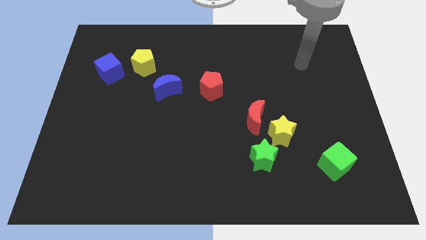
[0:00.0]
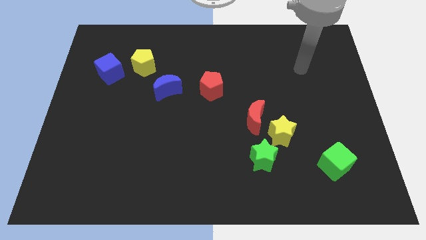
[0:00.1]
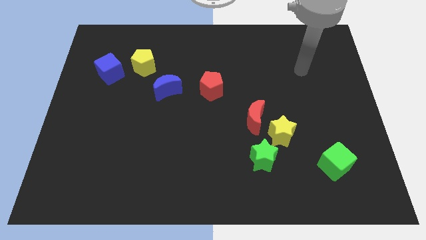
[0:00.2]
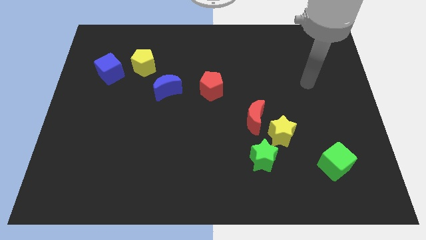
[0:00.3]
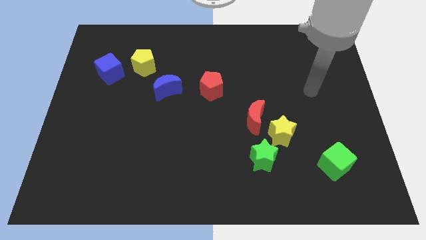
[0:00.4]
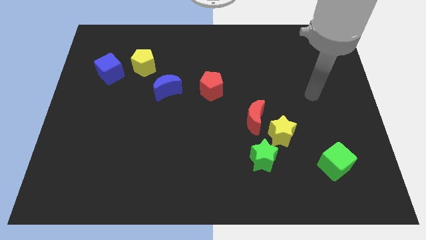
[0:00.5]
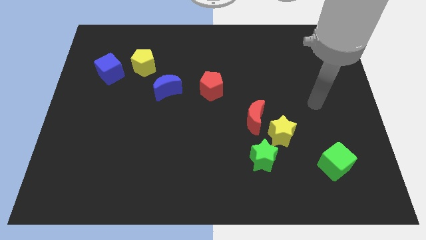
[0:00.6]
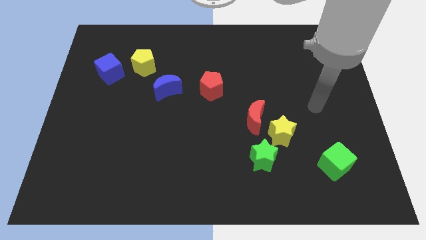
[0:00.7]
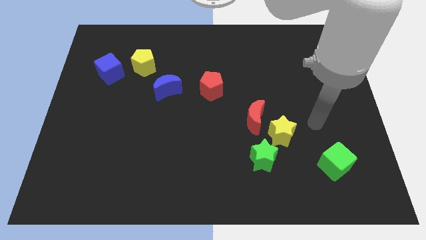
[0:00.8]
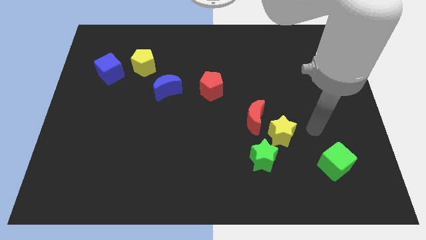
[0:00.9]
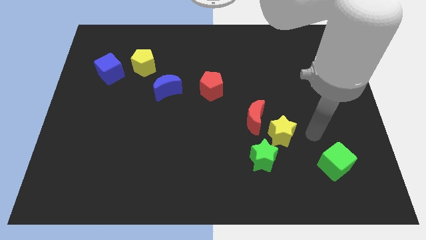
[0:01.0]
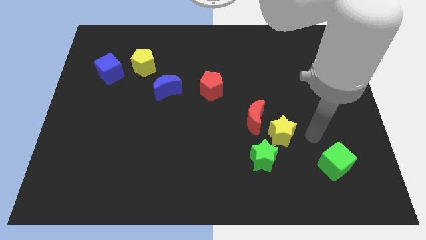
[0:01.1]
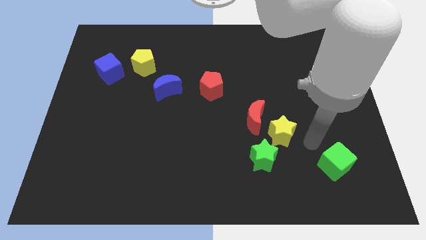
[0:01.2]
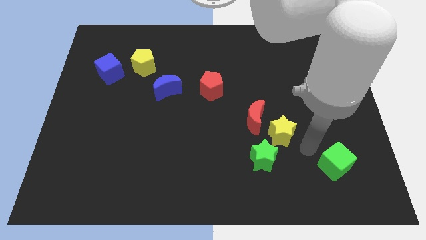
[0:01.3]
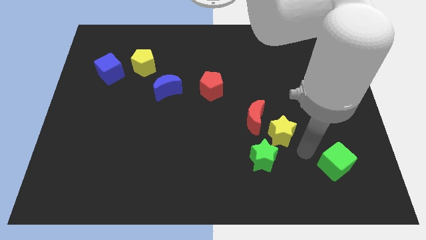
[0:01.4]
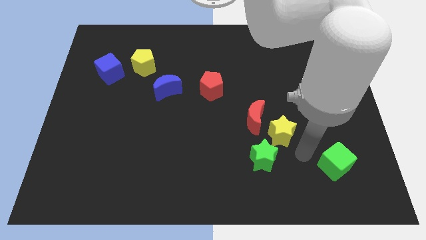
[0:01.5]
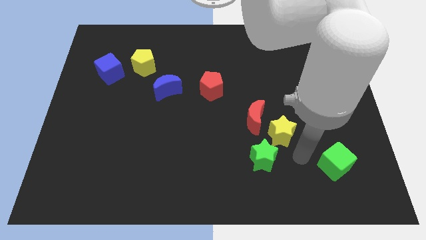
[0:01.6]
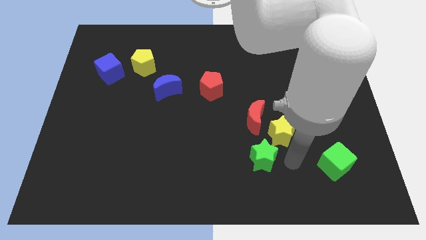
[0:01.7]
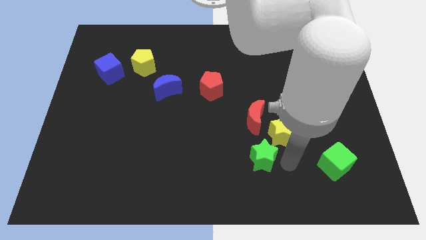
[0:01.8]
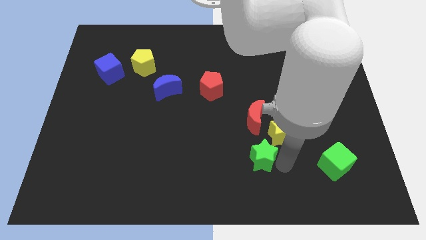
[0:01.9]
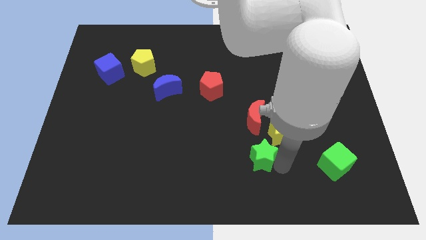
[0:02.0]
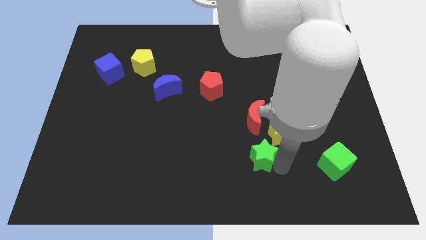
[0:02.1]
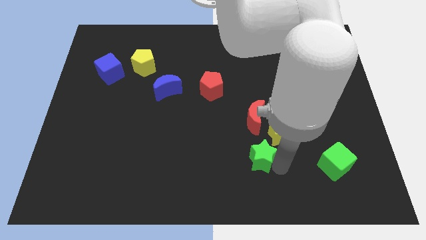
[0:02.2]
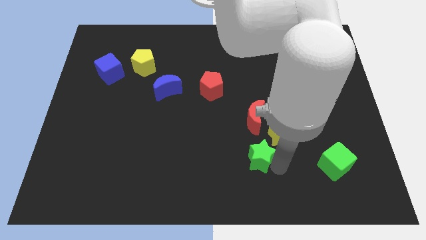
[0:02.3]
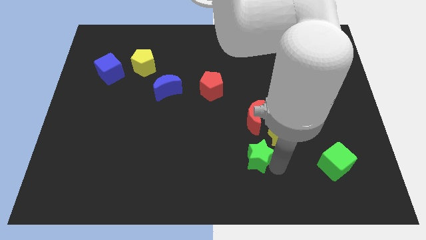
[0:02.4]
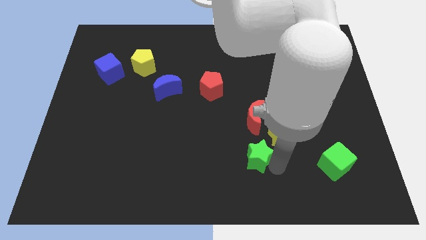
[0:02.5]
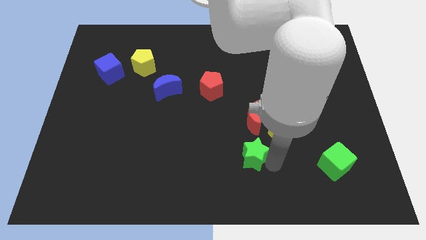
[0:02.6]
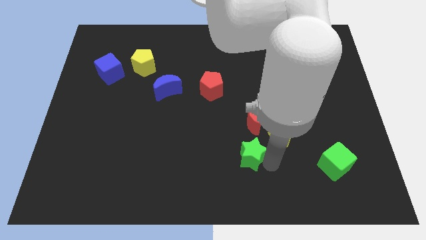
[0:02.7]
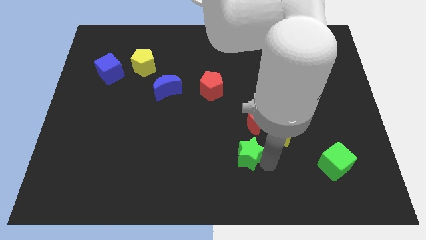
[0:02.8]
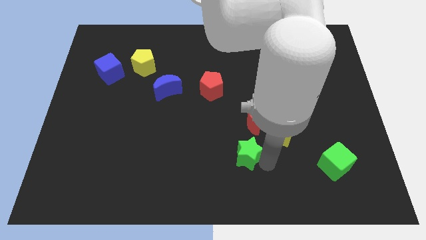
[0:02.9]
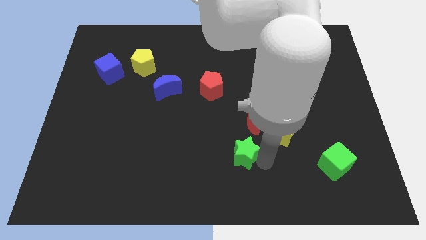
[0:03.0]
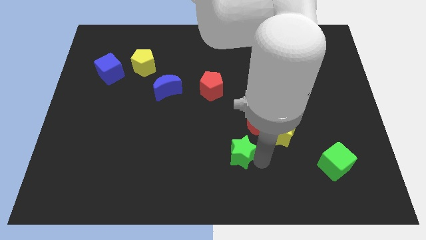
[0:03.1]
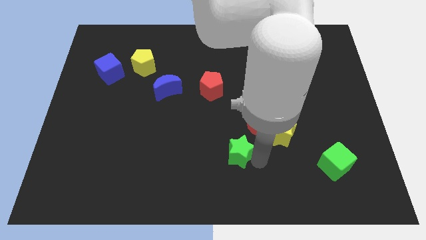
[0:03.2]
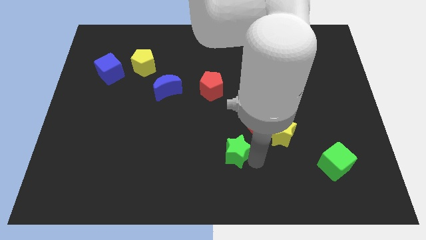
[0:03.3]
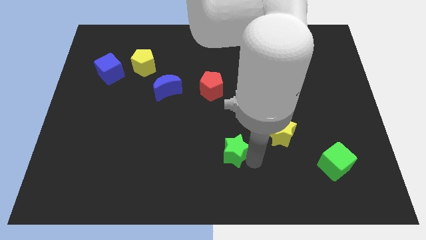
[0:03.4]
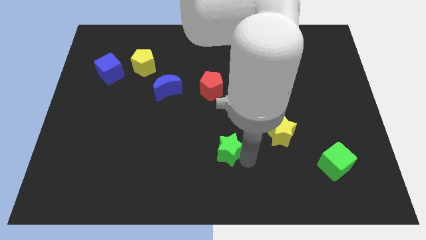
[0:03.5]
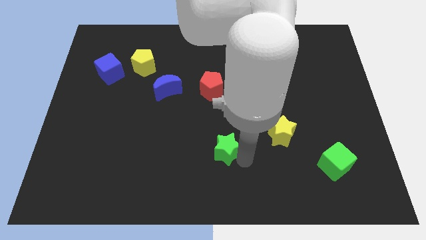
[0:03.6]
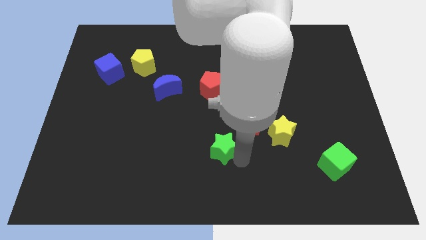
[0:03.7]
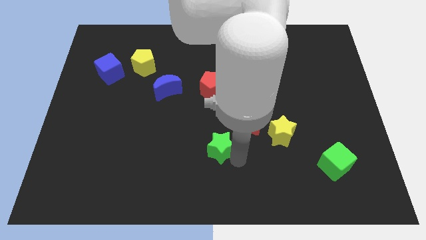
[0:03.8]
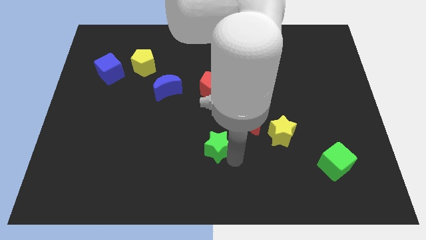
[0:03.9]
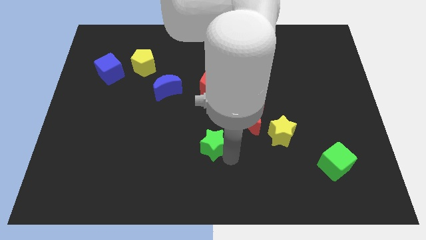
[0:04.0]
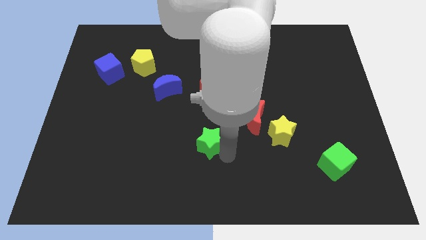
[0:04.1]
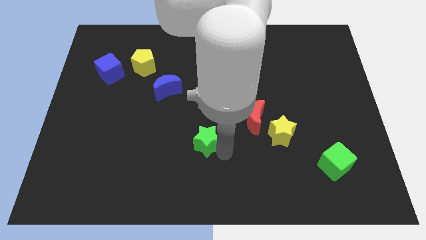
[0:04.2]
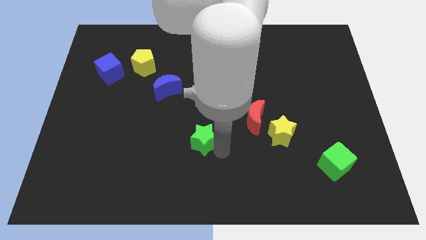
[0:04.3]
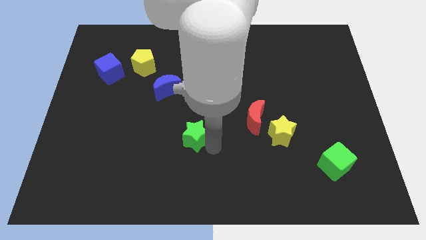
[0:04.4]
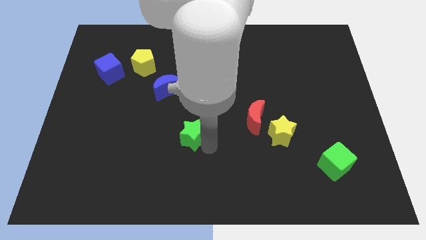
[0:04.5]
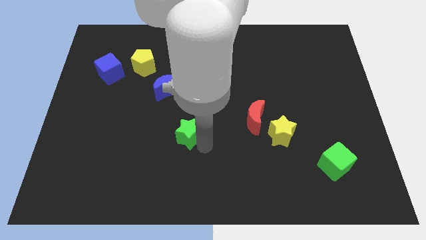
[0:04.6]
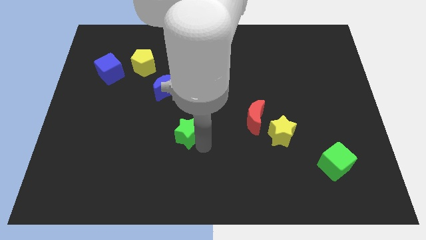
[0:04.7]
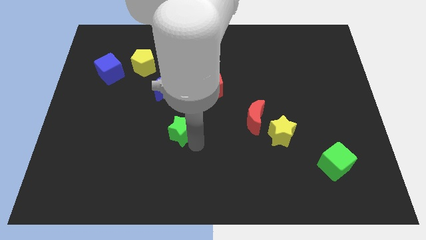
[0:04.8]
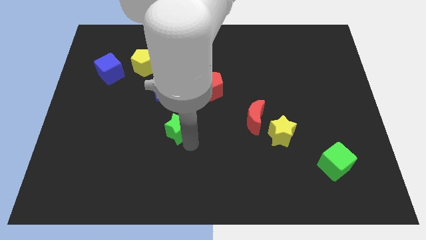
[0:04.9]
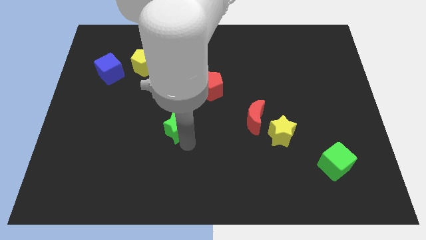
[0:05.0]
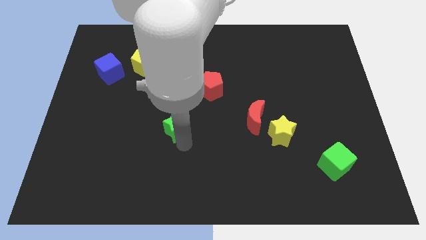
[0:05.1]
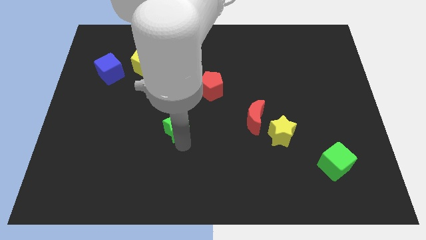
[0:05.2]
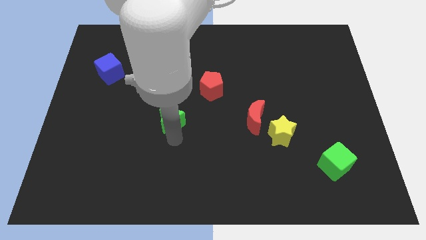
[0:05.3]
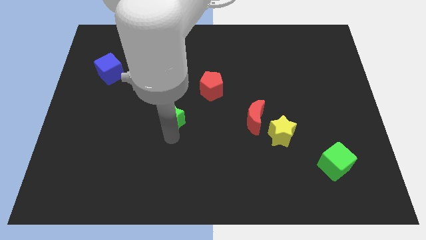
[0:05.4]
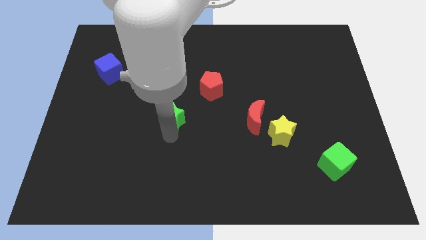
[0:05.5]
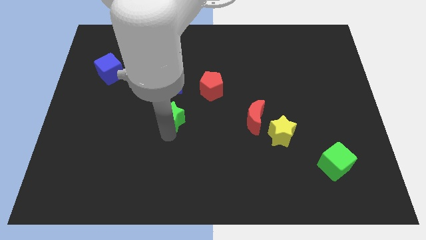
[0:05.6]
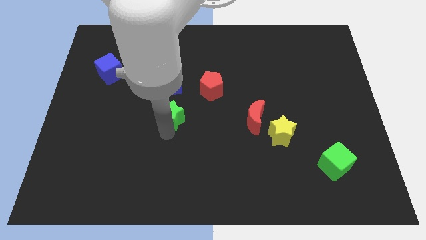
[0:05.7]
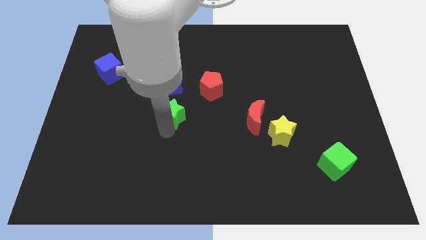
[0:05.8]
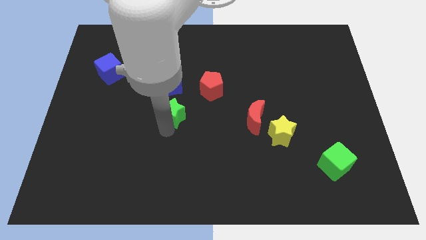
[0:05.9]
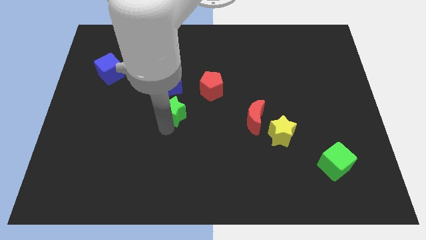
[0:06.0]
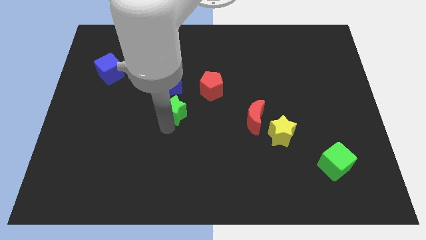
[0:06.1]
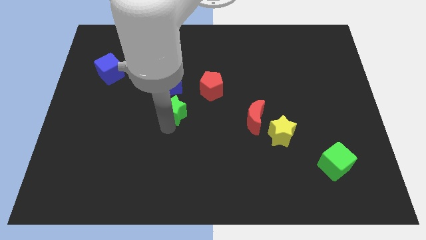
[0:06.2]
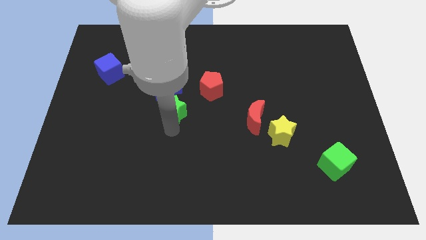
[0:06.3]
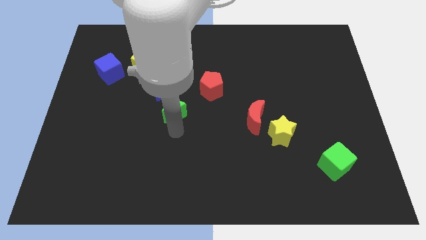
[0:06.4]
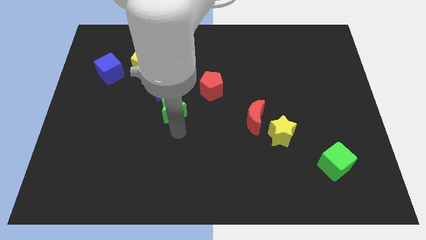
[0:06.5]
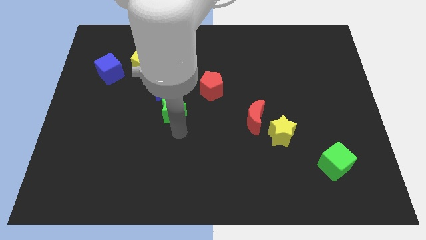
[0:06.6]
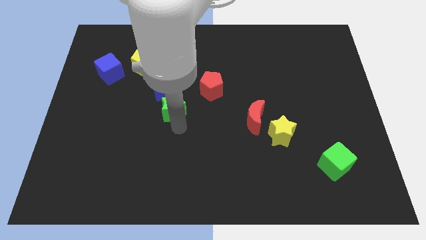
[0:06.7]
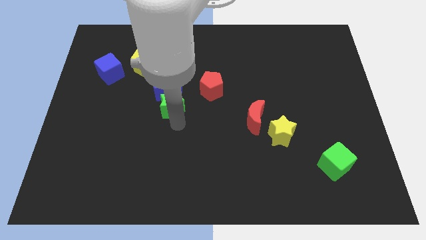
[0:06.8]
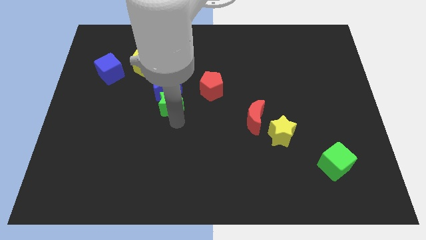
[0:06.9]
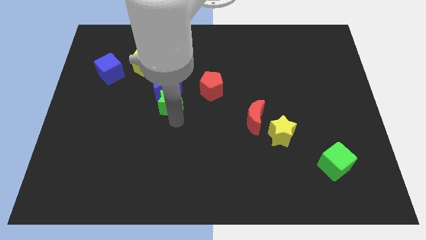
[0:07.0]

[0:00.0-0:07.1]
put the green star towards the blue moon

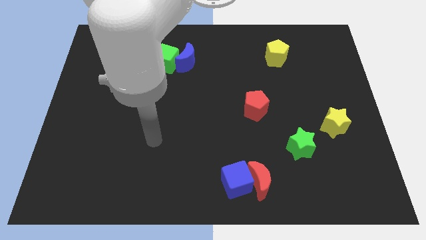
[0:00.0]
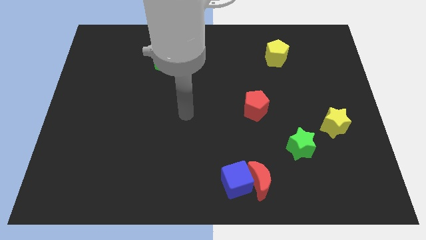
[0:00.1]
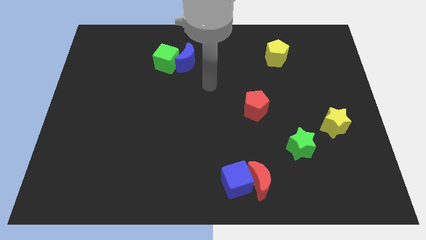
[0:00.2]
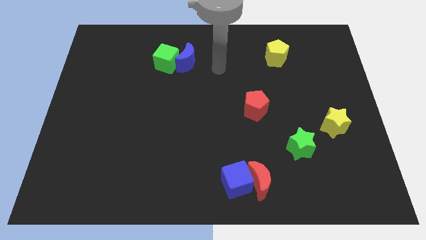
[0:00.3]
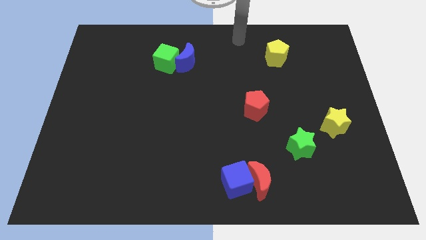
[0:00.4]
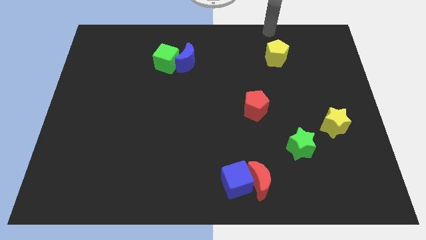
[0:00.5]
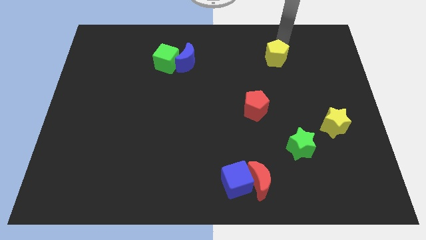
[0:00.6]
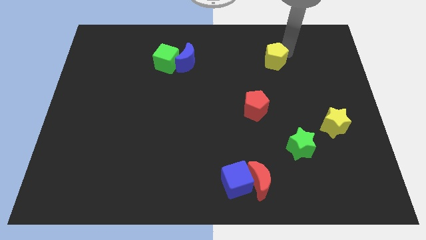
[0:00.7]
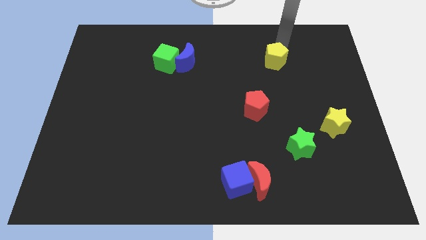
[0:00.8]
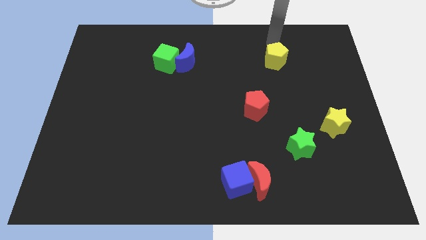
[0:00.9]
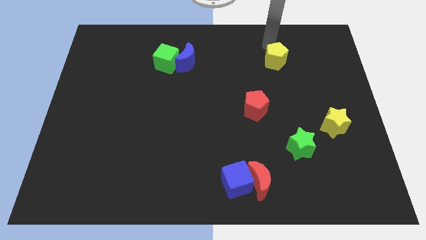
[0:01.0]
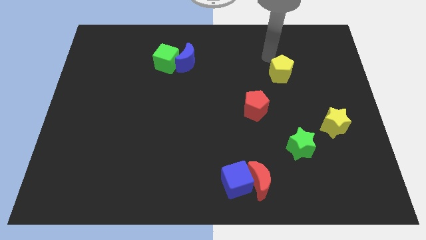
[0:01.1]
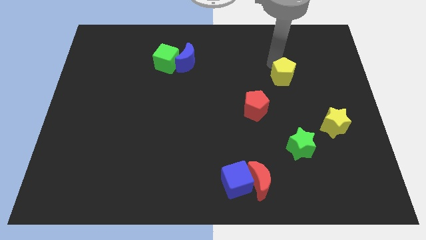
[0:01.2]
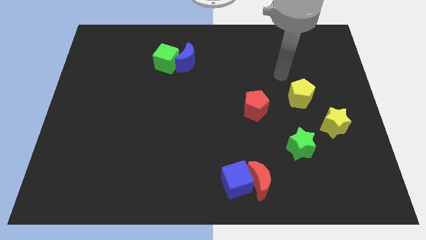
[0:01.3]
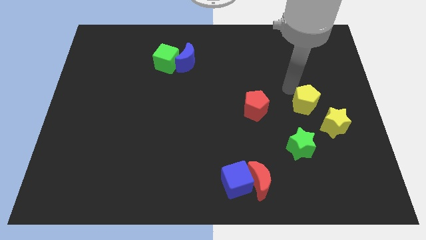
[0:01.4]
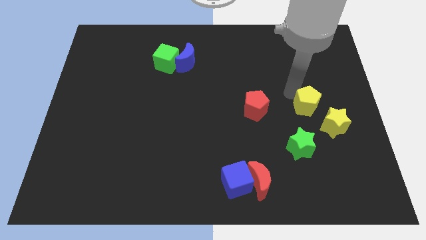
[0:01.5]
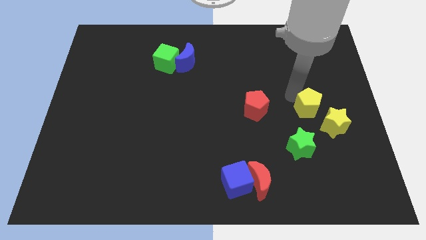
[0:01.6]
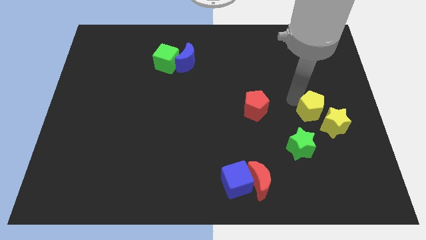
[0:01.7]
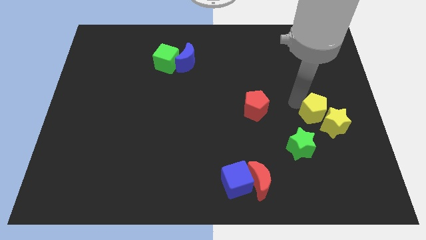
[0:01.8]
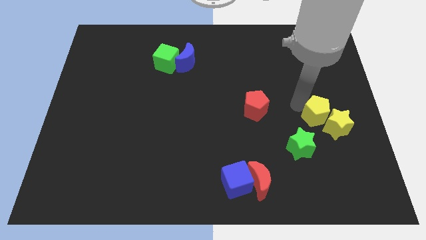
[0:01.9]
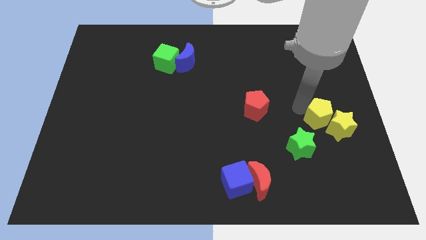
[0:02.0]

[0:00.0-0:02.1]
put the yellow pentagon next to the yellow star
